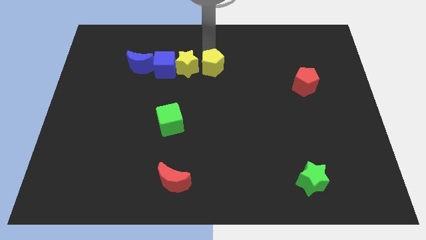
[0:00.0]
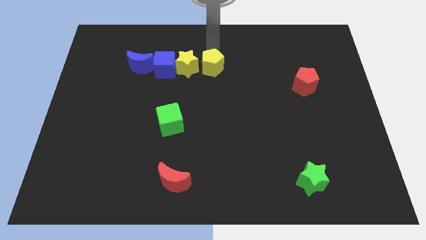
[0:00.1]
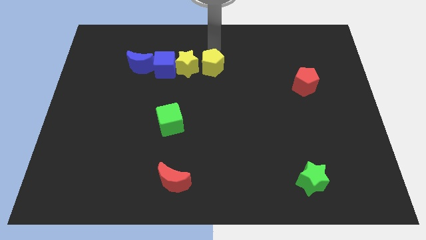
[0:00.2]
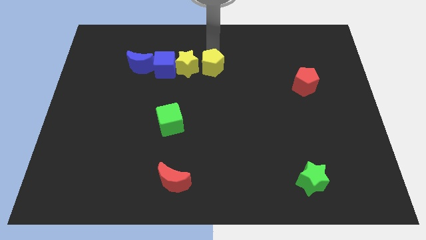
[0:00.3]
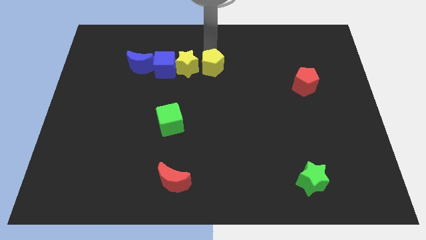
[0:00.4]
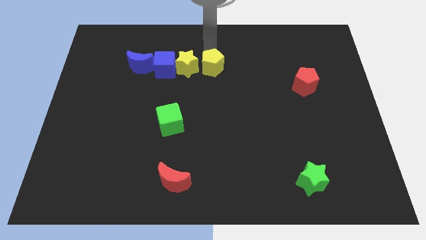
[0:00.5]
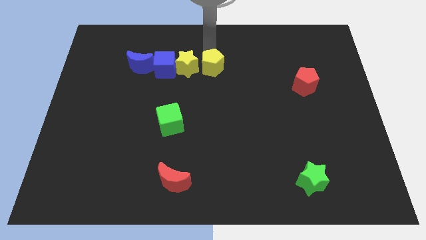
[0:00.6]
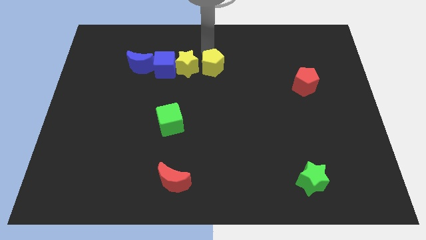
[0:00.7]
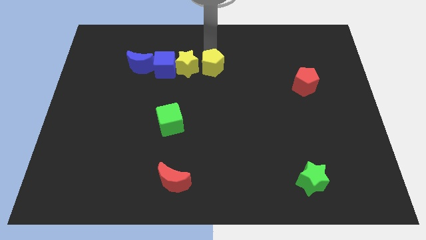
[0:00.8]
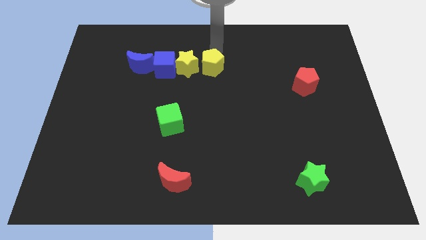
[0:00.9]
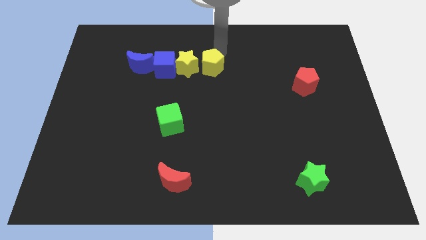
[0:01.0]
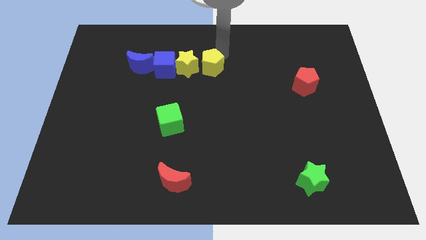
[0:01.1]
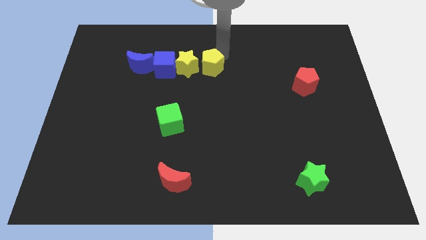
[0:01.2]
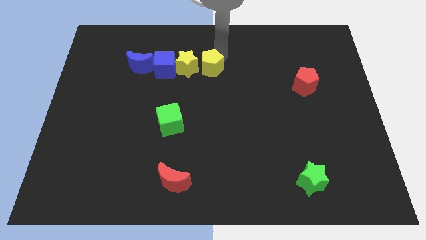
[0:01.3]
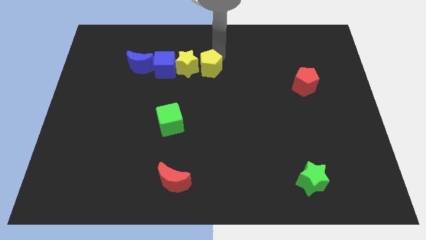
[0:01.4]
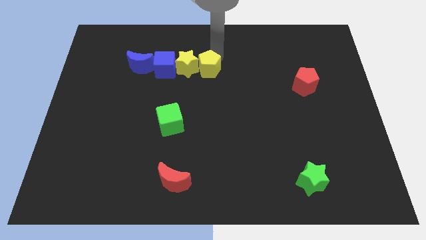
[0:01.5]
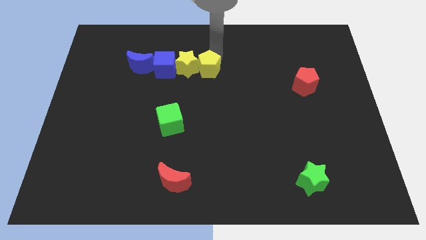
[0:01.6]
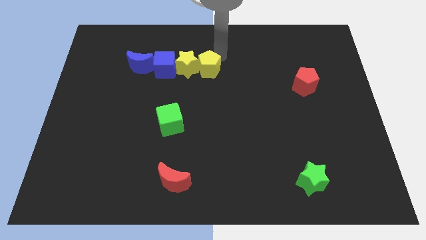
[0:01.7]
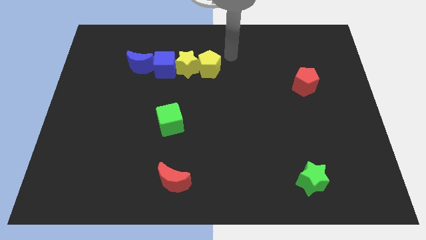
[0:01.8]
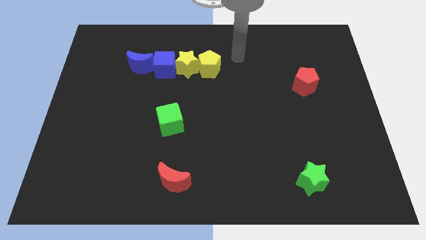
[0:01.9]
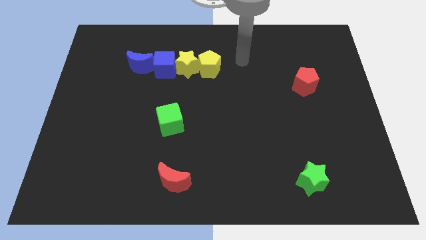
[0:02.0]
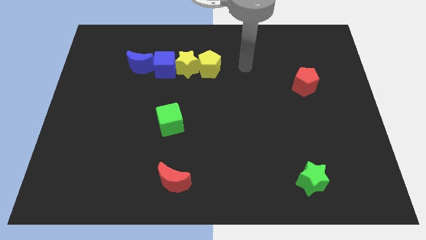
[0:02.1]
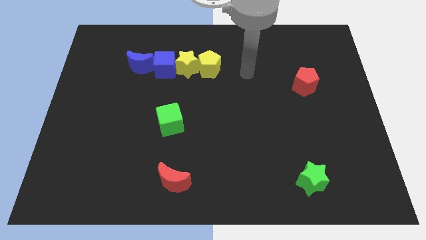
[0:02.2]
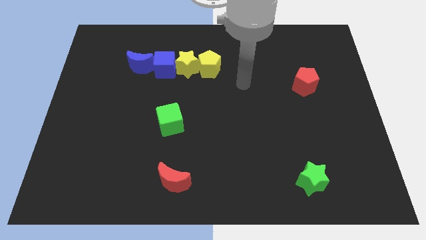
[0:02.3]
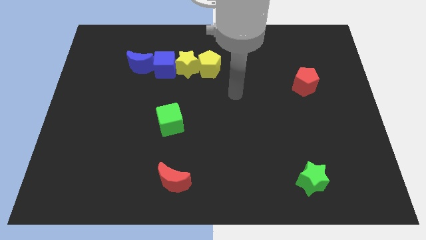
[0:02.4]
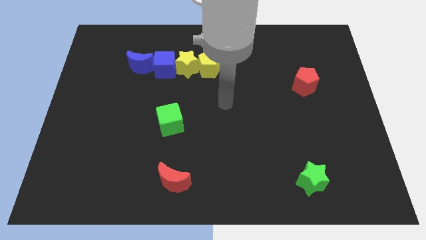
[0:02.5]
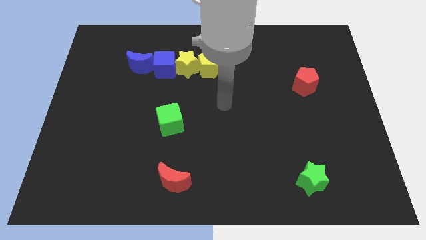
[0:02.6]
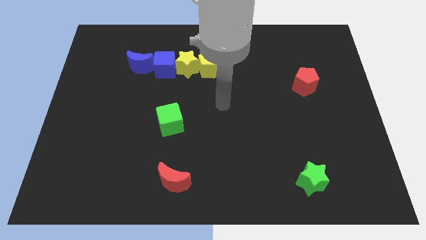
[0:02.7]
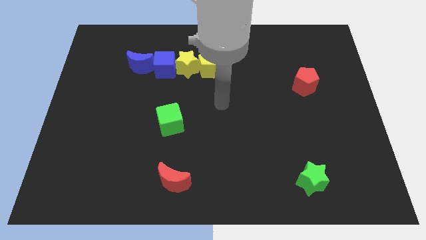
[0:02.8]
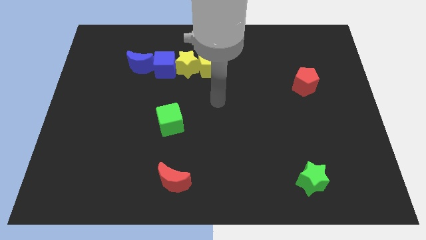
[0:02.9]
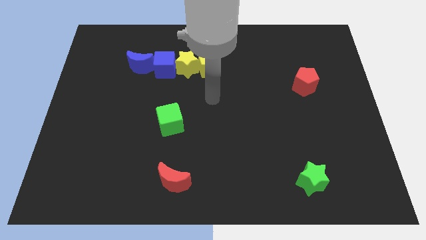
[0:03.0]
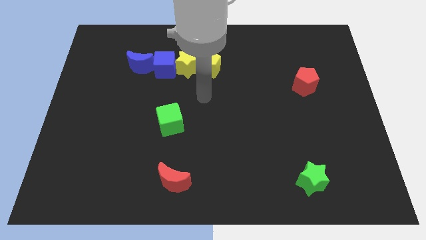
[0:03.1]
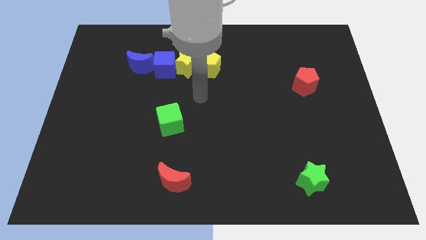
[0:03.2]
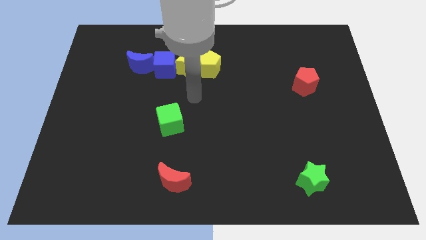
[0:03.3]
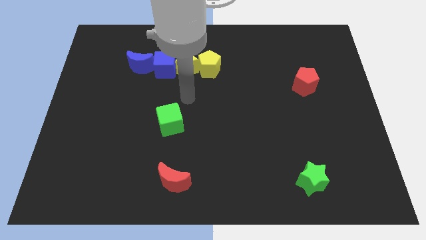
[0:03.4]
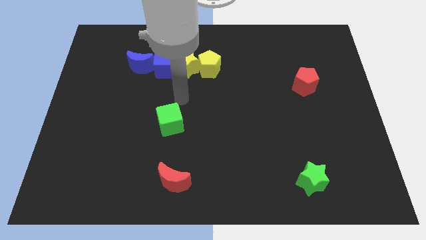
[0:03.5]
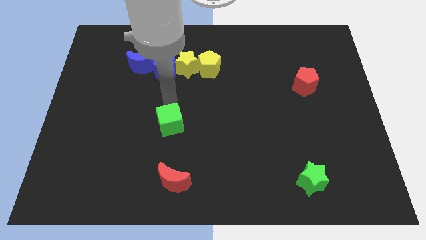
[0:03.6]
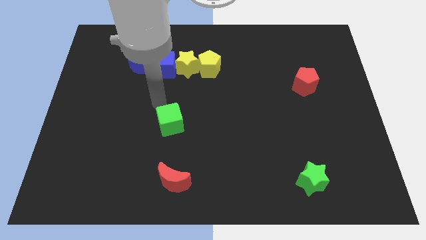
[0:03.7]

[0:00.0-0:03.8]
place your arm above the green cube

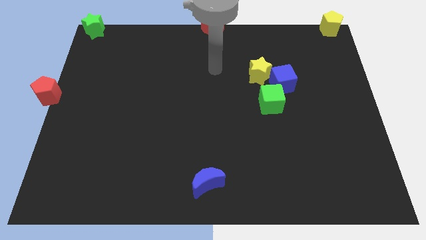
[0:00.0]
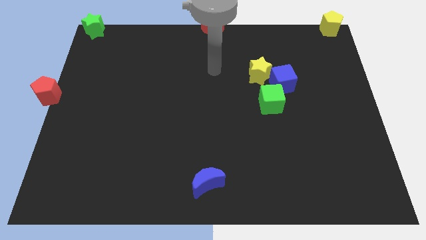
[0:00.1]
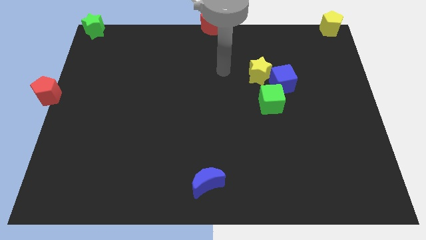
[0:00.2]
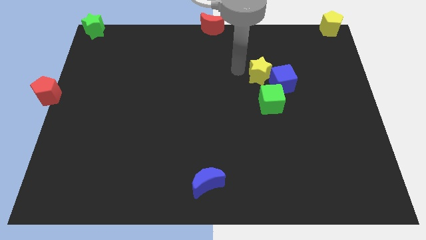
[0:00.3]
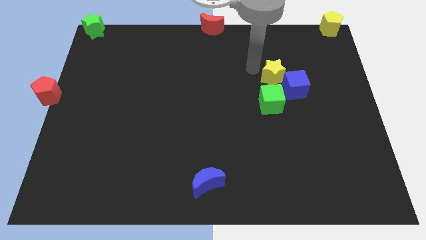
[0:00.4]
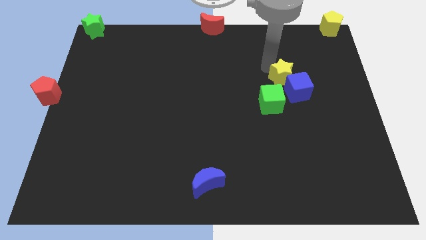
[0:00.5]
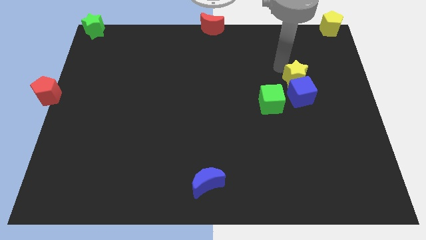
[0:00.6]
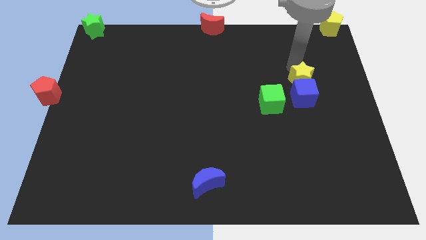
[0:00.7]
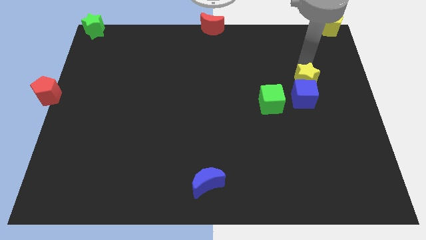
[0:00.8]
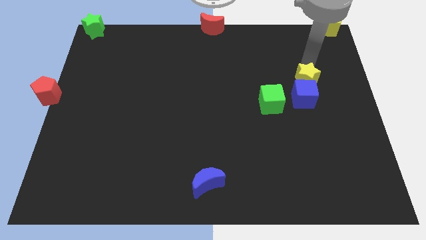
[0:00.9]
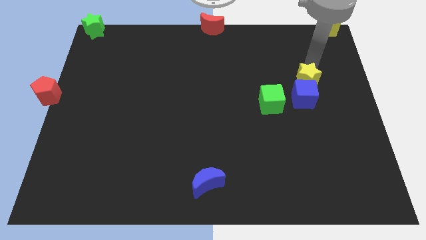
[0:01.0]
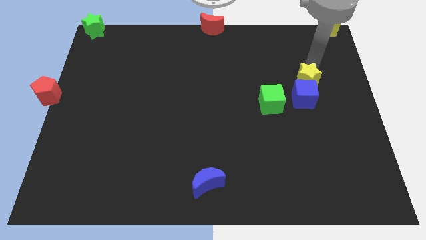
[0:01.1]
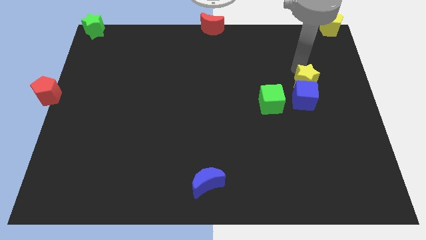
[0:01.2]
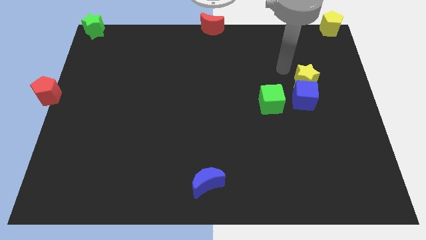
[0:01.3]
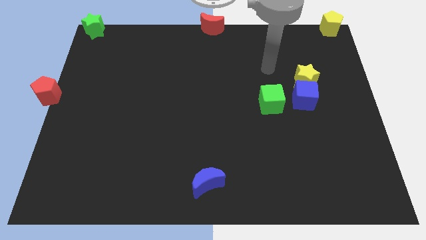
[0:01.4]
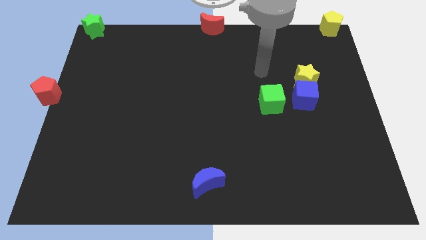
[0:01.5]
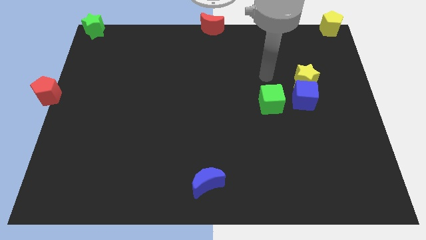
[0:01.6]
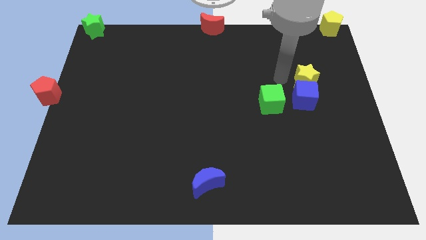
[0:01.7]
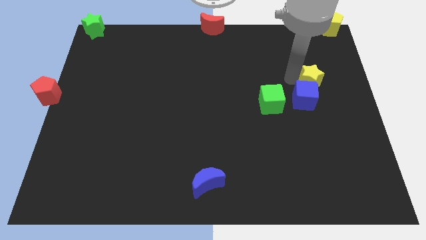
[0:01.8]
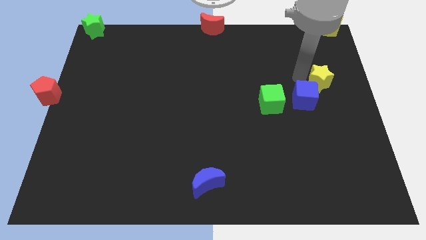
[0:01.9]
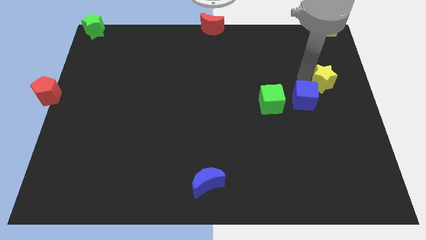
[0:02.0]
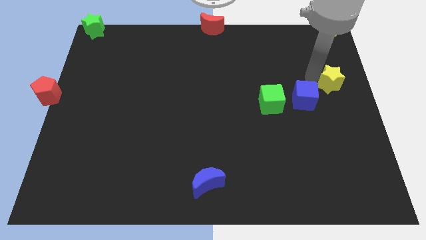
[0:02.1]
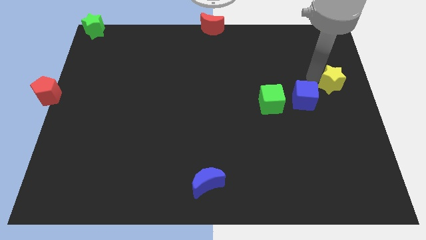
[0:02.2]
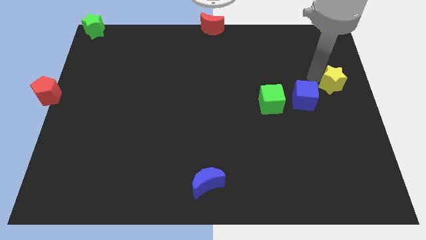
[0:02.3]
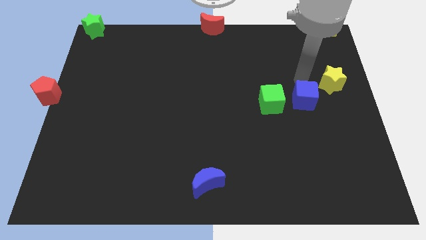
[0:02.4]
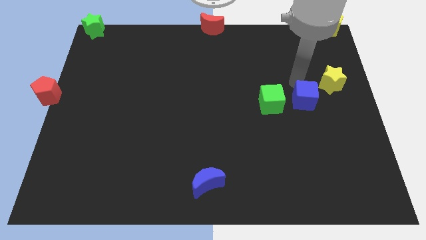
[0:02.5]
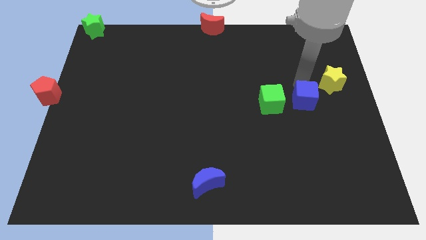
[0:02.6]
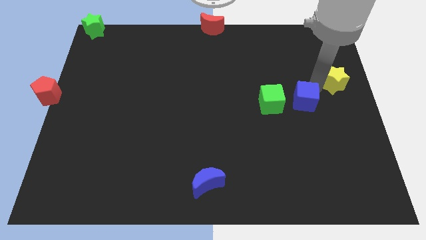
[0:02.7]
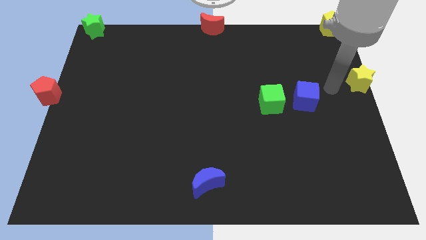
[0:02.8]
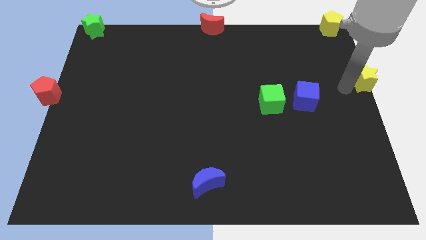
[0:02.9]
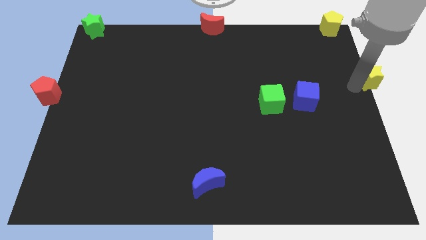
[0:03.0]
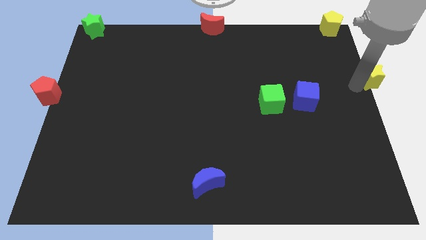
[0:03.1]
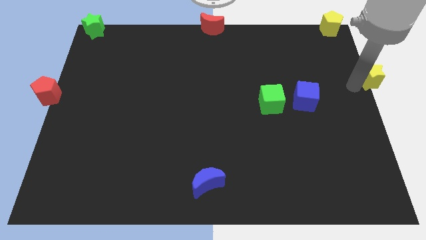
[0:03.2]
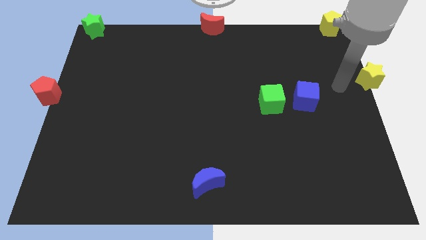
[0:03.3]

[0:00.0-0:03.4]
push the yellow star towards the right center of the board

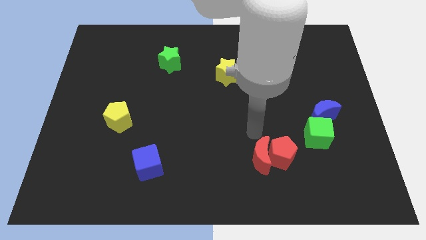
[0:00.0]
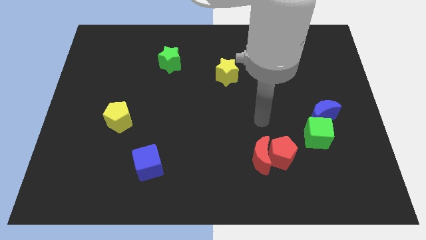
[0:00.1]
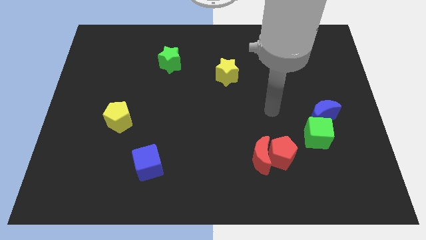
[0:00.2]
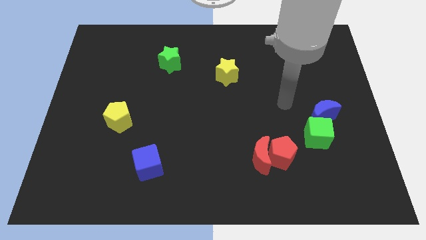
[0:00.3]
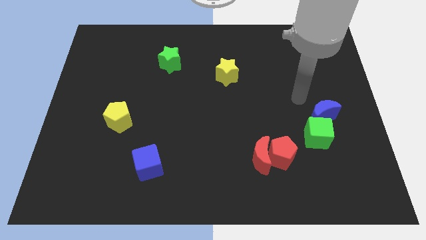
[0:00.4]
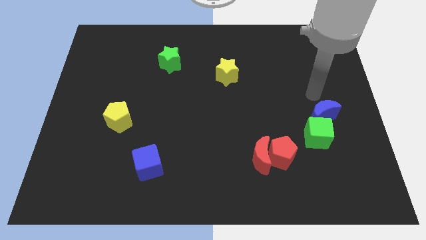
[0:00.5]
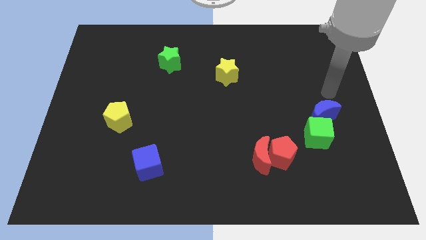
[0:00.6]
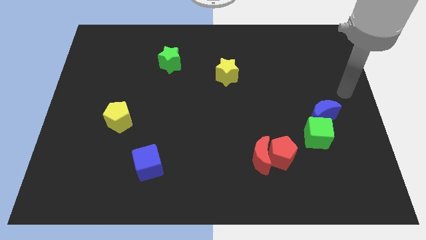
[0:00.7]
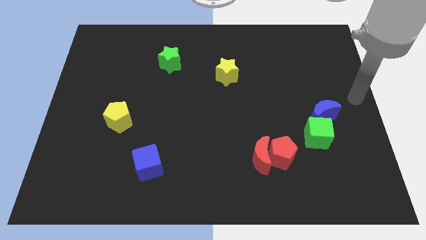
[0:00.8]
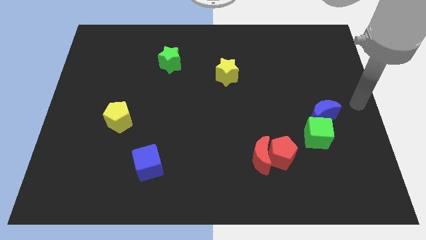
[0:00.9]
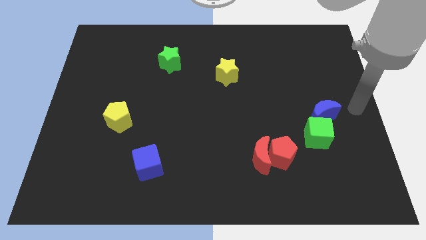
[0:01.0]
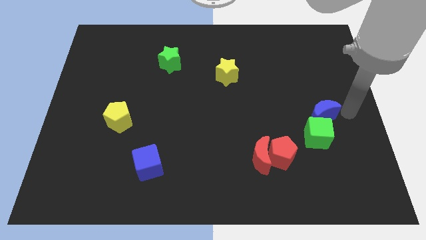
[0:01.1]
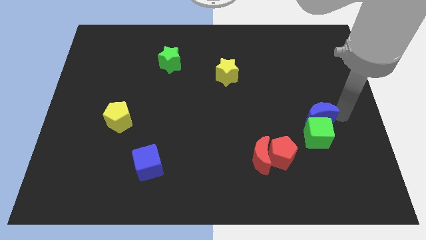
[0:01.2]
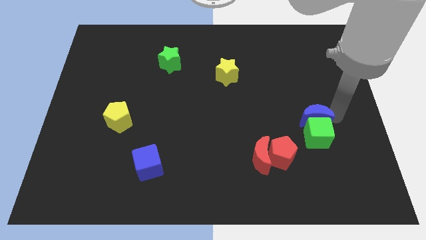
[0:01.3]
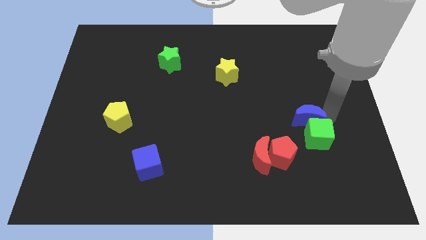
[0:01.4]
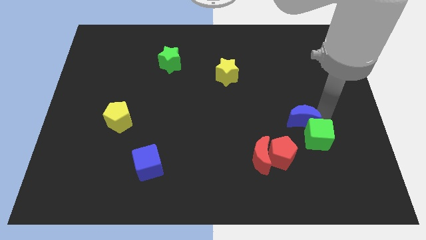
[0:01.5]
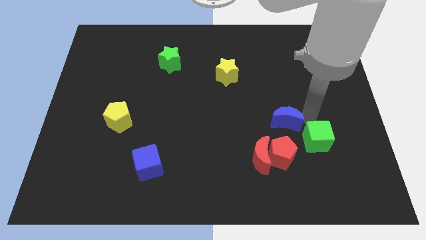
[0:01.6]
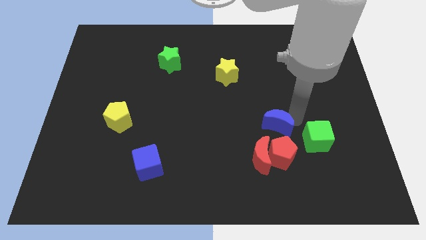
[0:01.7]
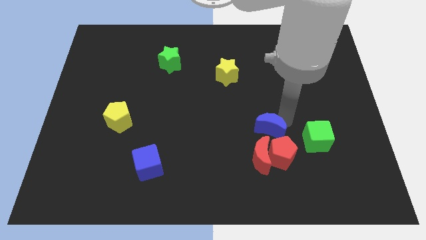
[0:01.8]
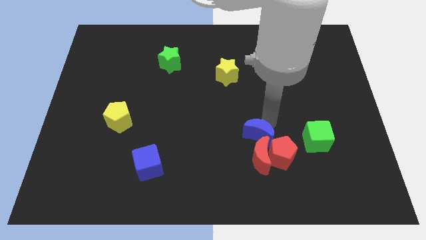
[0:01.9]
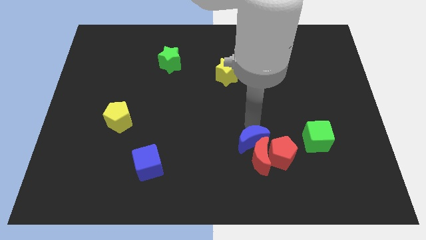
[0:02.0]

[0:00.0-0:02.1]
push the blue moon above red moon
